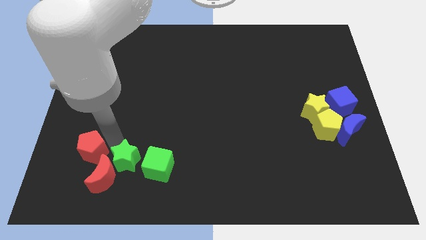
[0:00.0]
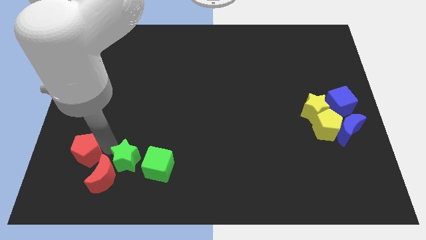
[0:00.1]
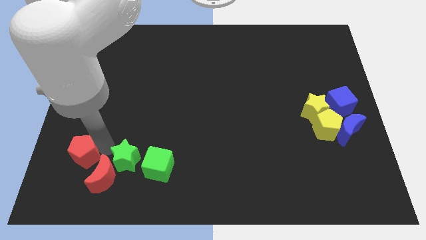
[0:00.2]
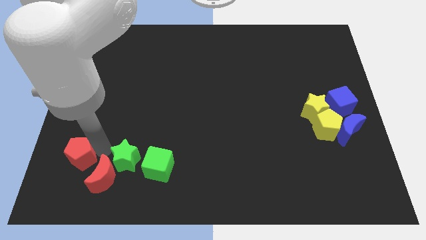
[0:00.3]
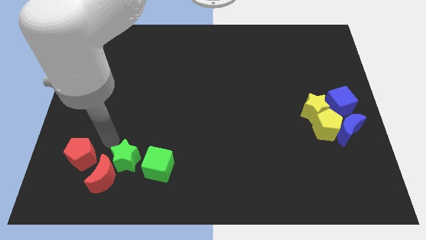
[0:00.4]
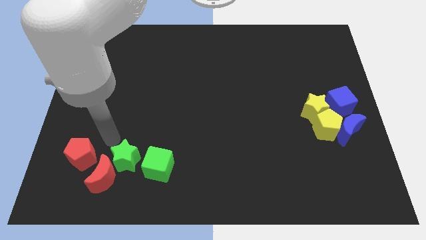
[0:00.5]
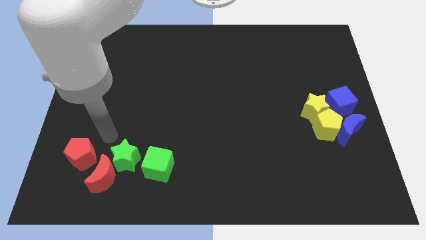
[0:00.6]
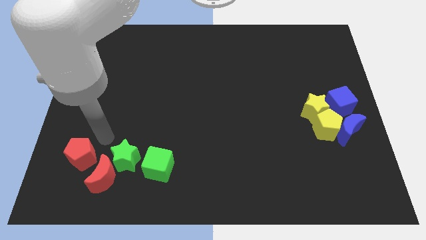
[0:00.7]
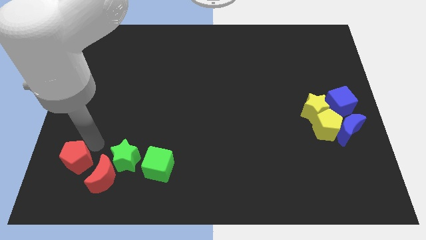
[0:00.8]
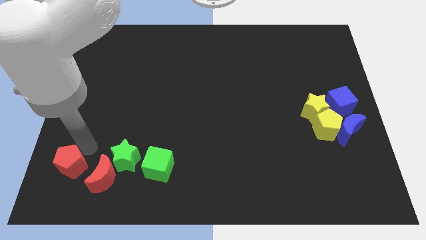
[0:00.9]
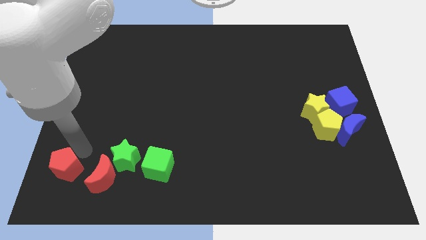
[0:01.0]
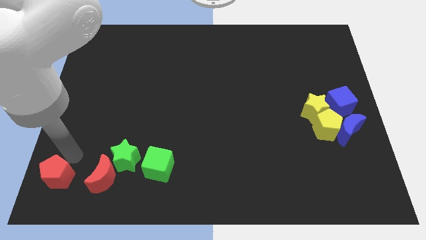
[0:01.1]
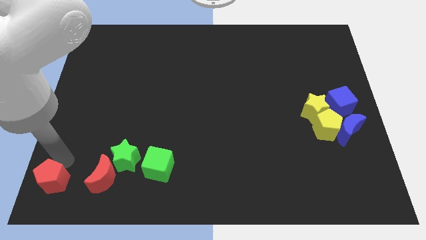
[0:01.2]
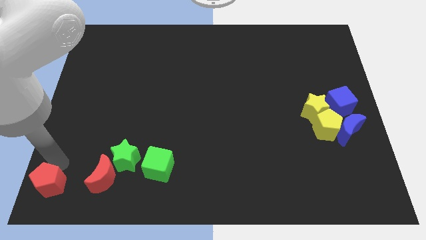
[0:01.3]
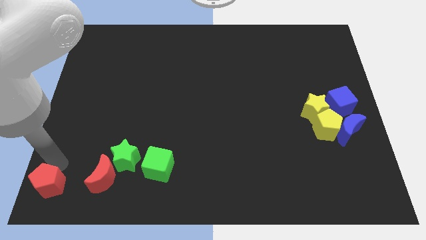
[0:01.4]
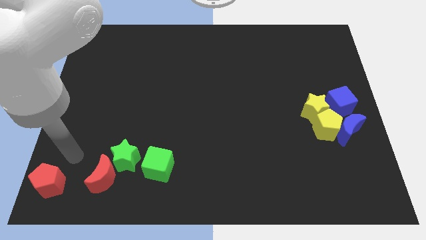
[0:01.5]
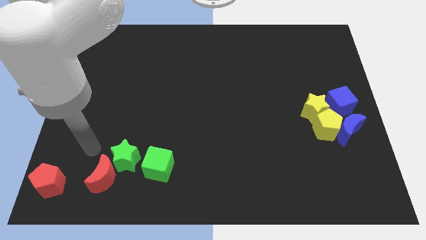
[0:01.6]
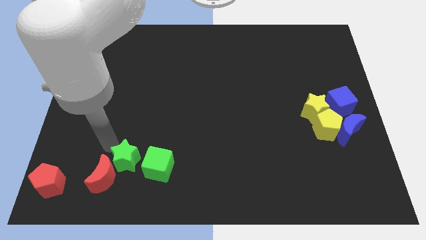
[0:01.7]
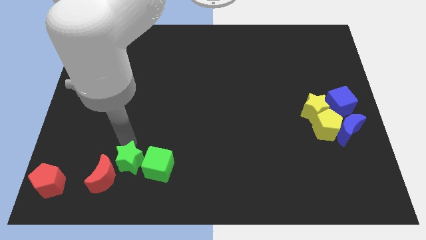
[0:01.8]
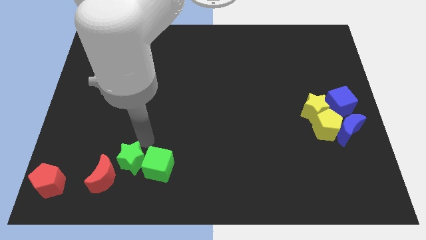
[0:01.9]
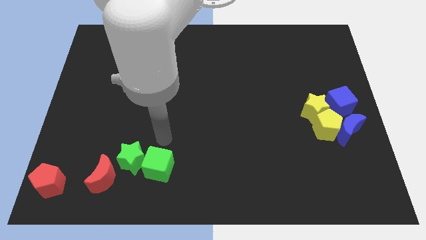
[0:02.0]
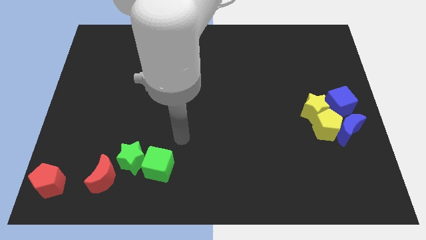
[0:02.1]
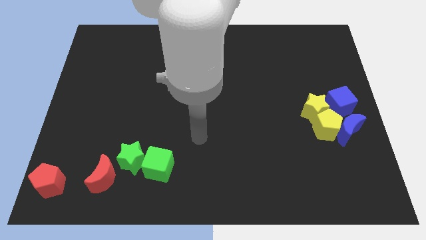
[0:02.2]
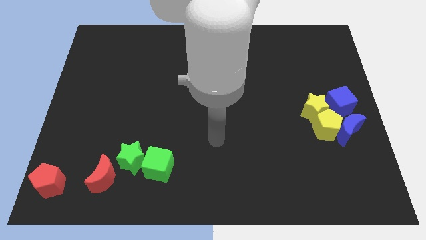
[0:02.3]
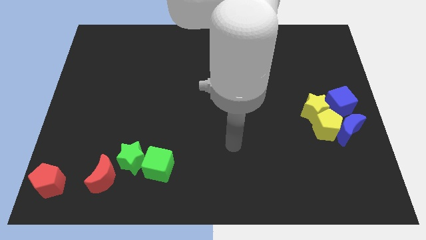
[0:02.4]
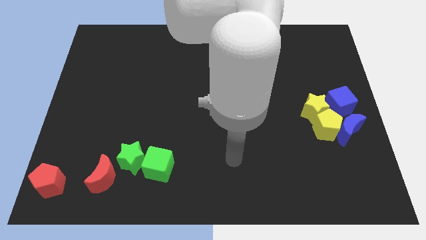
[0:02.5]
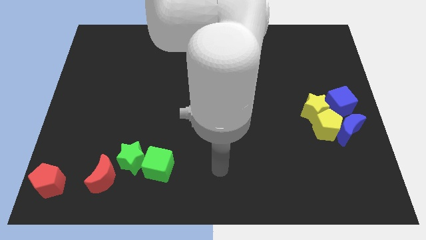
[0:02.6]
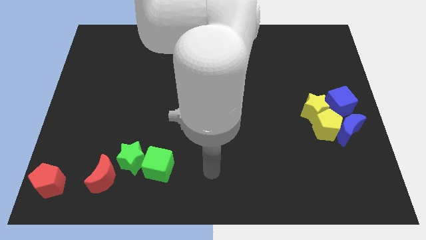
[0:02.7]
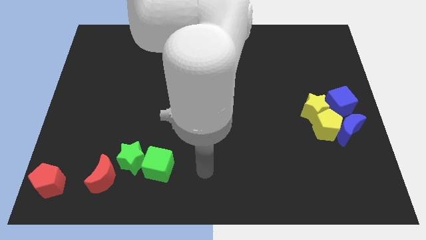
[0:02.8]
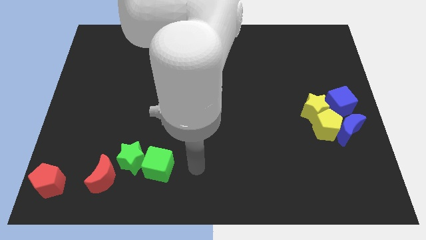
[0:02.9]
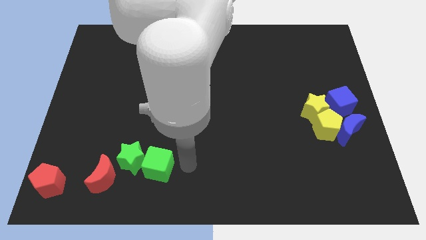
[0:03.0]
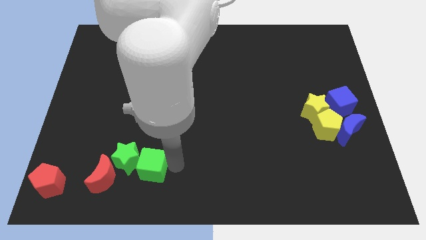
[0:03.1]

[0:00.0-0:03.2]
move the red pentagon to the bottom left

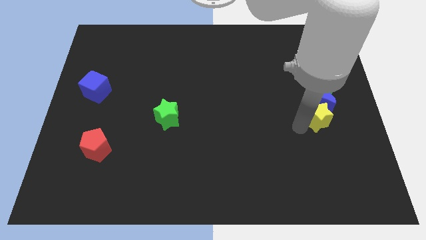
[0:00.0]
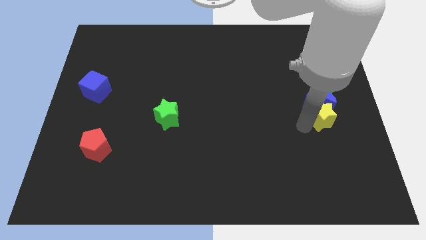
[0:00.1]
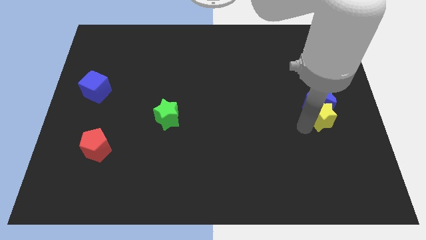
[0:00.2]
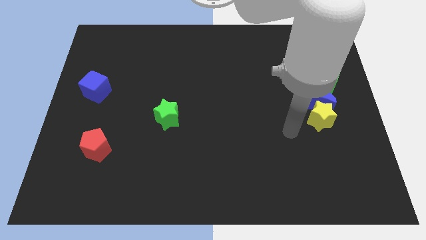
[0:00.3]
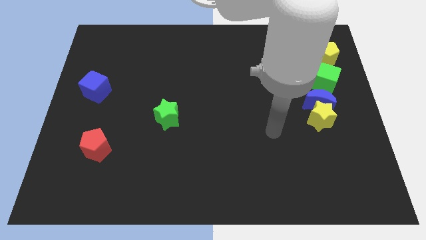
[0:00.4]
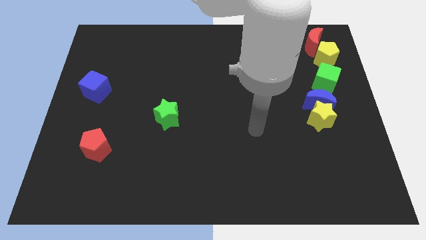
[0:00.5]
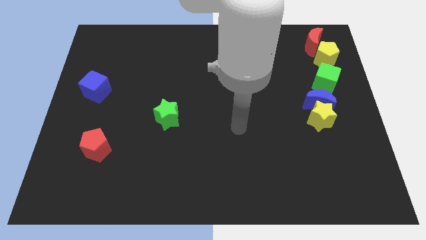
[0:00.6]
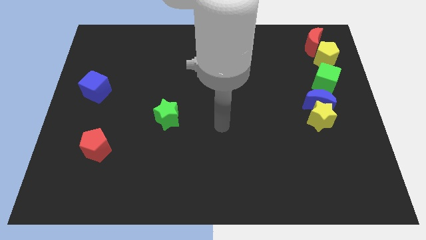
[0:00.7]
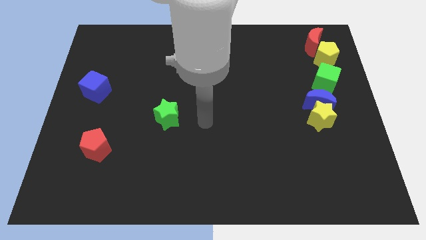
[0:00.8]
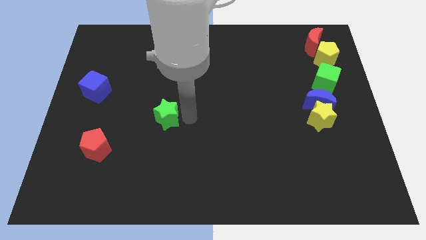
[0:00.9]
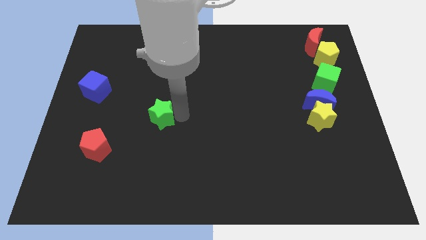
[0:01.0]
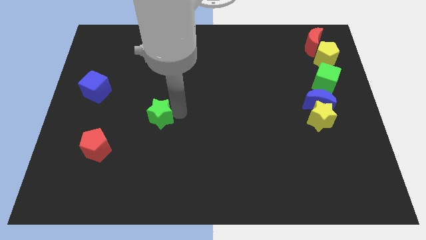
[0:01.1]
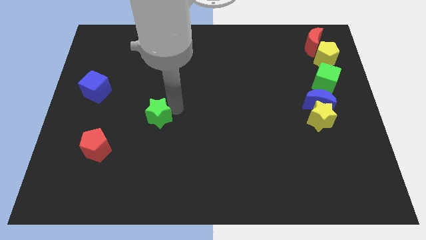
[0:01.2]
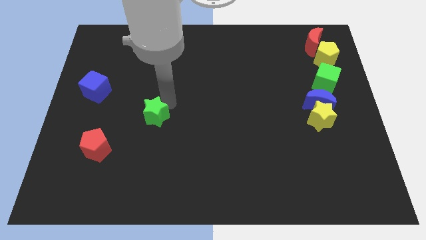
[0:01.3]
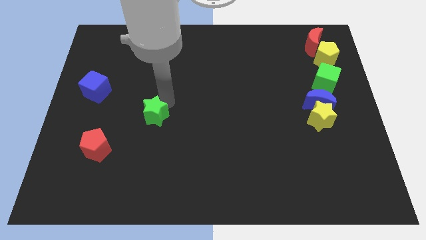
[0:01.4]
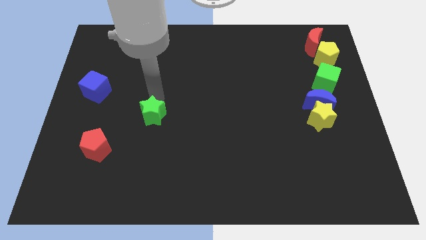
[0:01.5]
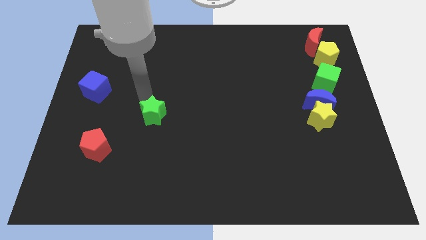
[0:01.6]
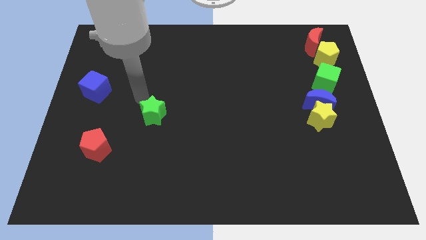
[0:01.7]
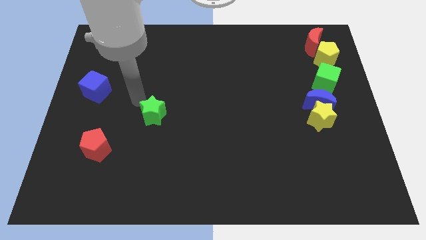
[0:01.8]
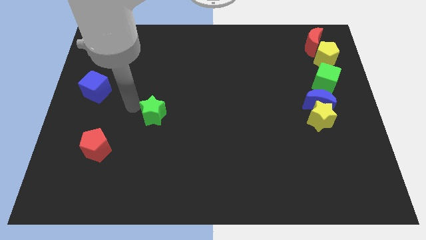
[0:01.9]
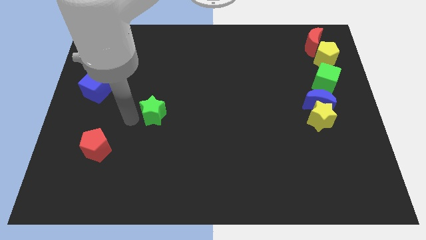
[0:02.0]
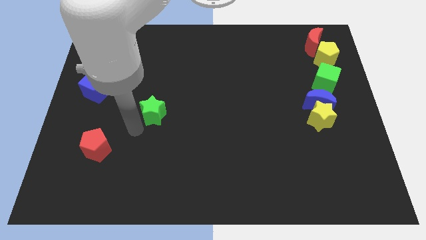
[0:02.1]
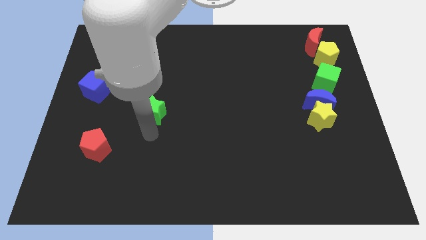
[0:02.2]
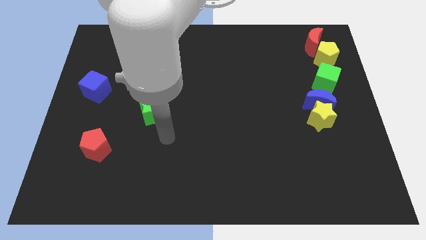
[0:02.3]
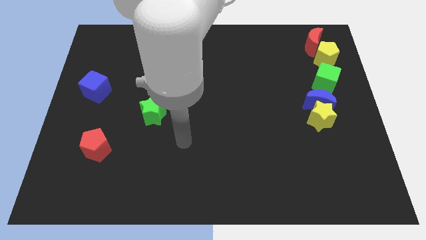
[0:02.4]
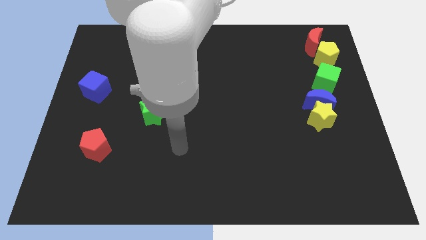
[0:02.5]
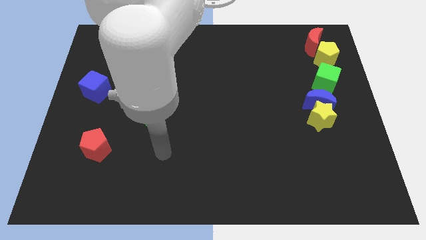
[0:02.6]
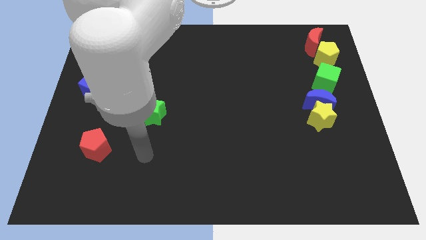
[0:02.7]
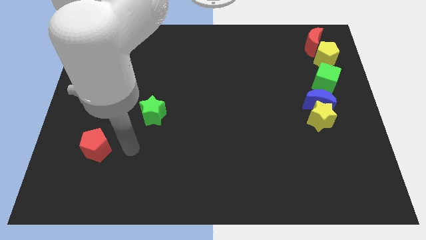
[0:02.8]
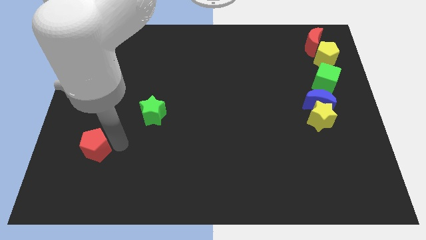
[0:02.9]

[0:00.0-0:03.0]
tap the green star and go away

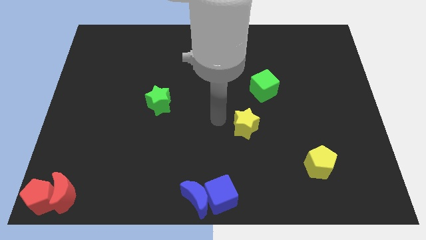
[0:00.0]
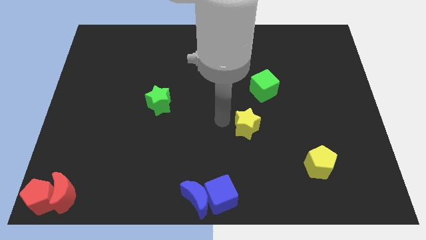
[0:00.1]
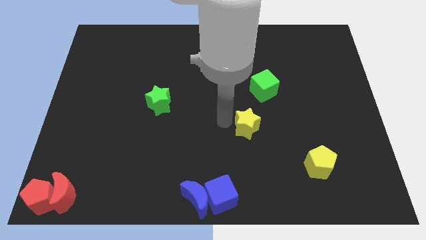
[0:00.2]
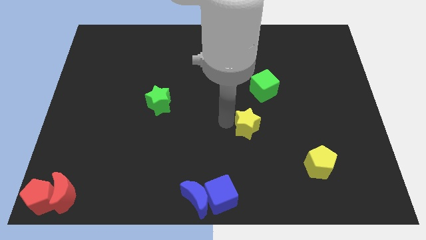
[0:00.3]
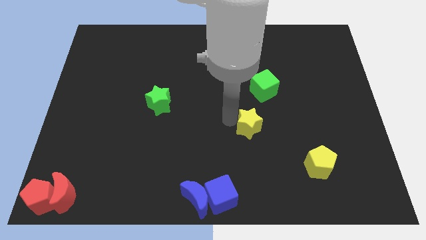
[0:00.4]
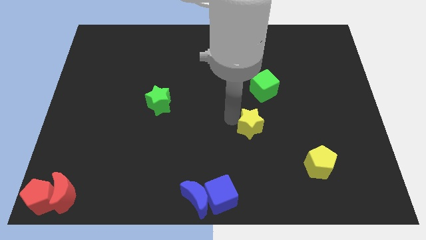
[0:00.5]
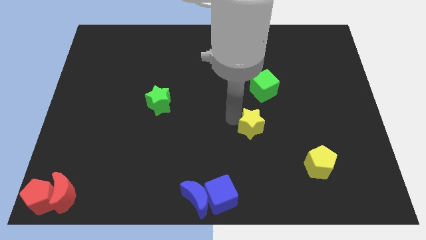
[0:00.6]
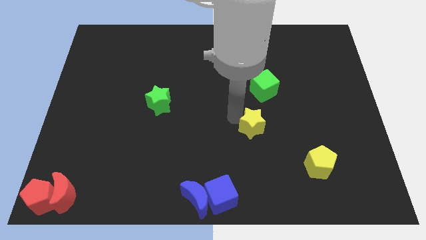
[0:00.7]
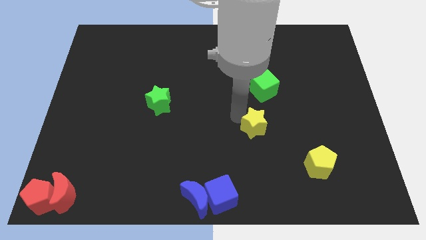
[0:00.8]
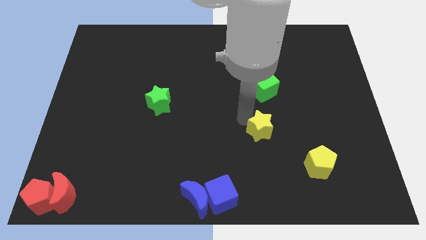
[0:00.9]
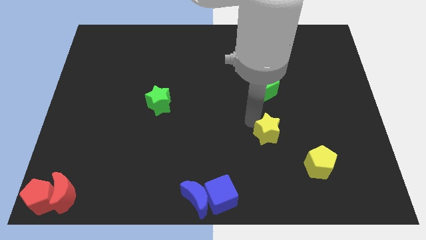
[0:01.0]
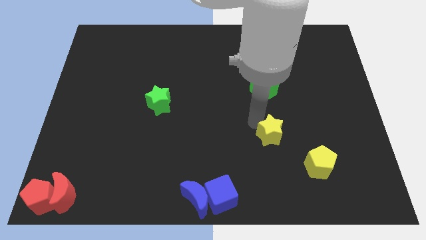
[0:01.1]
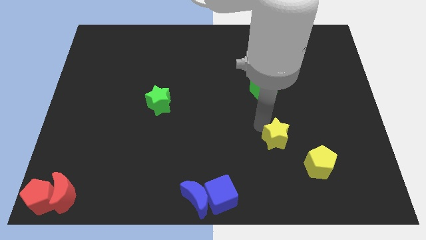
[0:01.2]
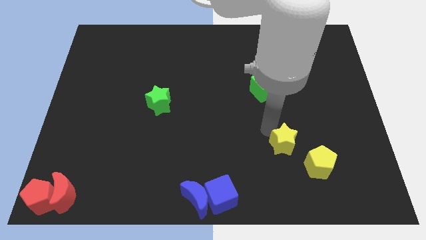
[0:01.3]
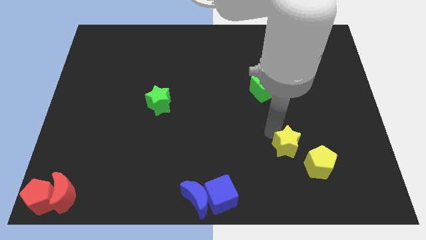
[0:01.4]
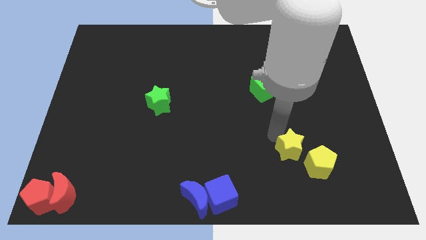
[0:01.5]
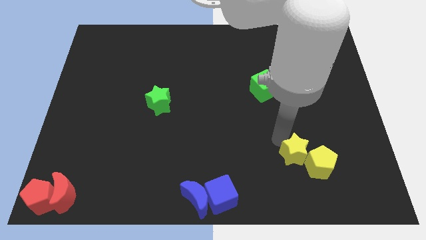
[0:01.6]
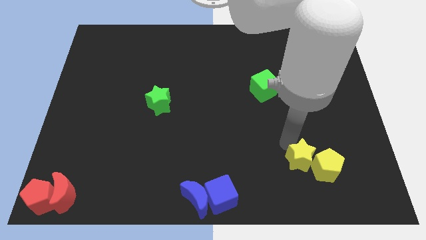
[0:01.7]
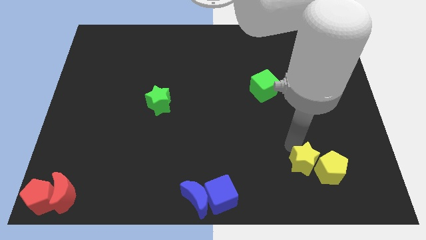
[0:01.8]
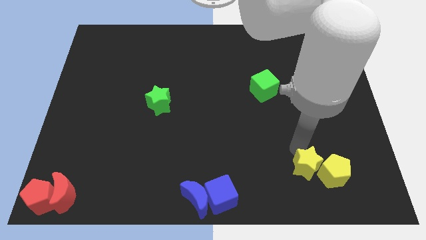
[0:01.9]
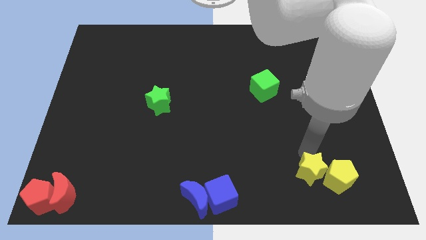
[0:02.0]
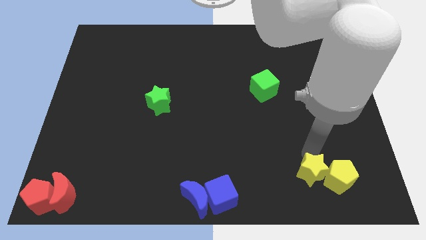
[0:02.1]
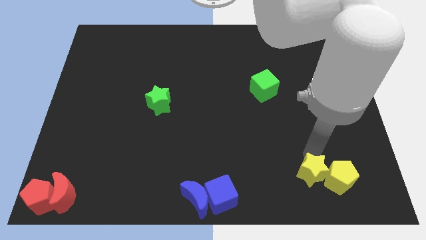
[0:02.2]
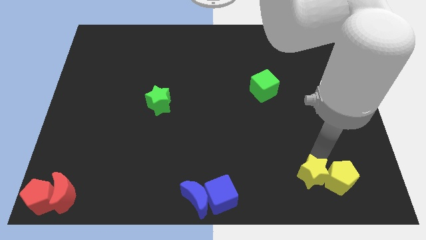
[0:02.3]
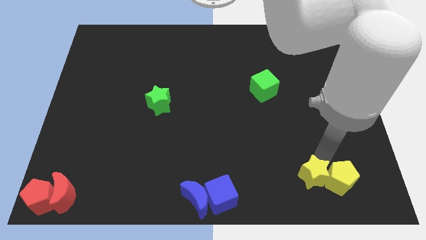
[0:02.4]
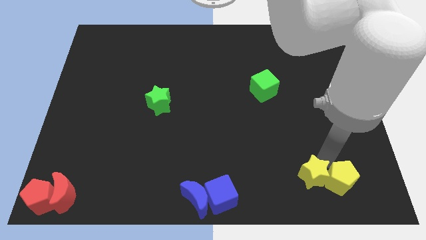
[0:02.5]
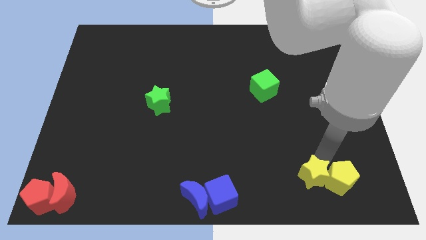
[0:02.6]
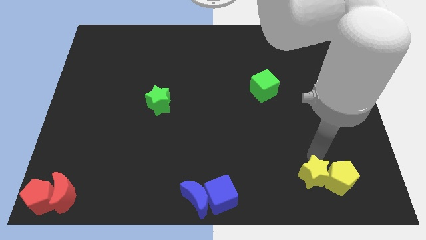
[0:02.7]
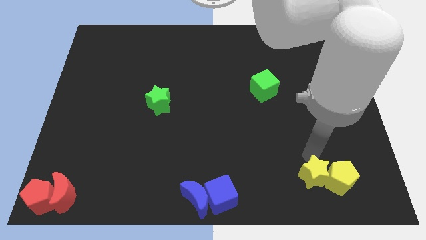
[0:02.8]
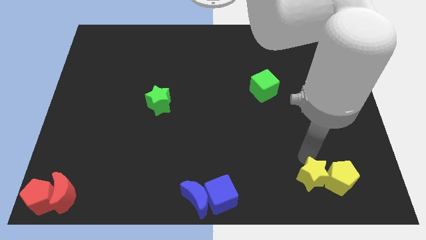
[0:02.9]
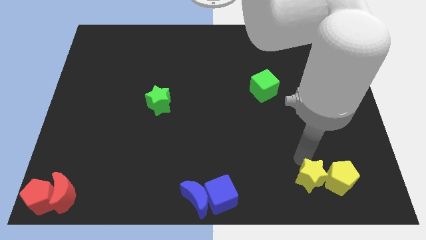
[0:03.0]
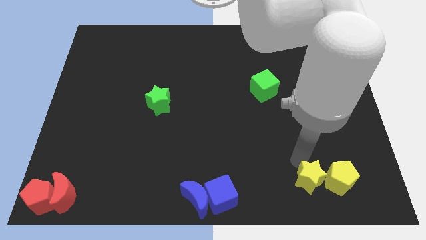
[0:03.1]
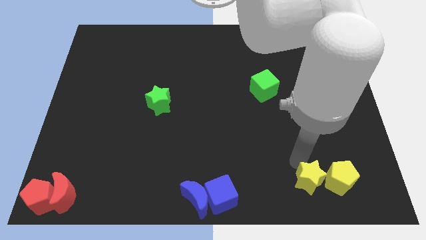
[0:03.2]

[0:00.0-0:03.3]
push yellow star into yellow pentagon
